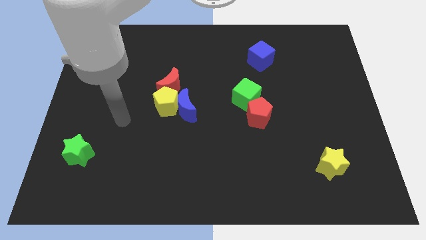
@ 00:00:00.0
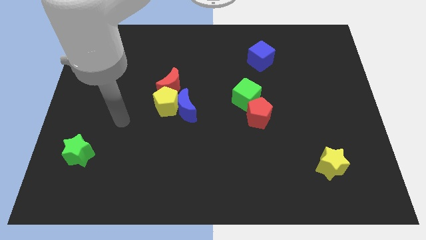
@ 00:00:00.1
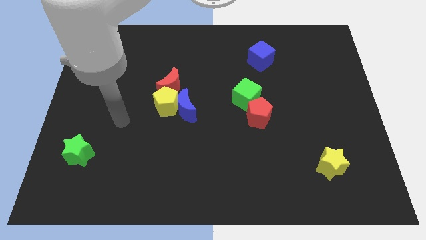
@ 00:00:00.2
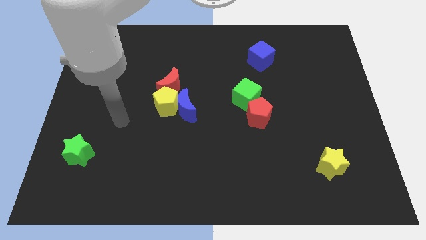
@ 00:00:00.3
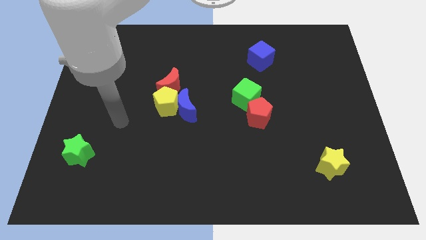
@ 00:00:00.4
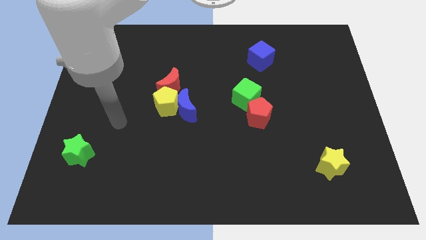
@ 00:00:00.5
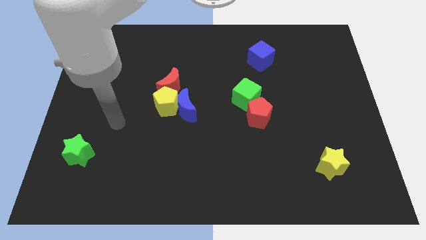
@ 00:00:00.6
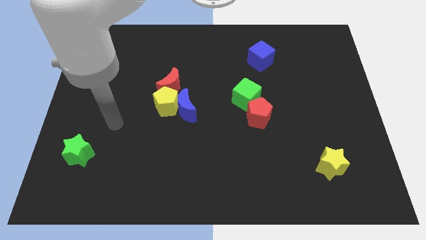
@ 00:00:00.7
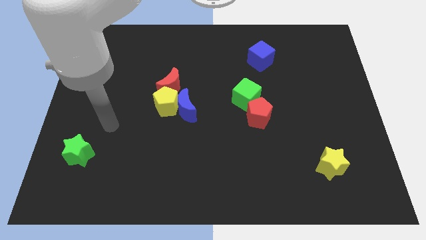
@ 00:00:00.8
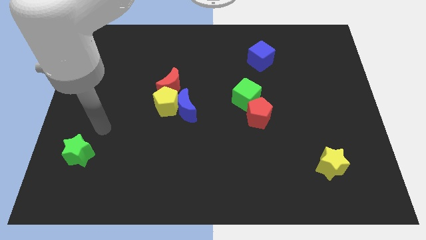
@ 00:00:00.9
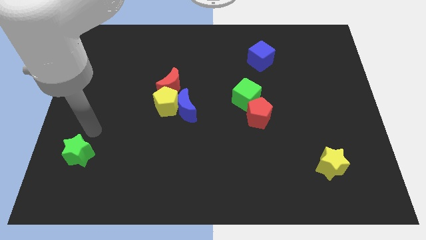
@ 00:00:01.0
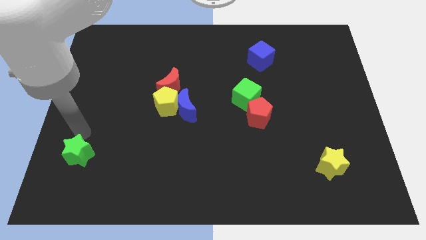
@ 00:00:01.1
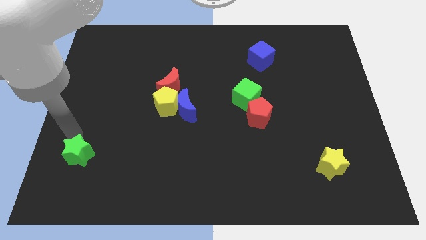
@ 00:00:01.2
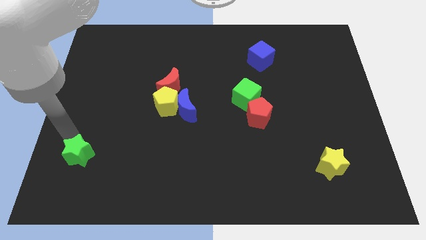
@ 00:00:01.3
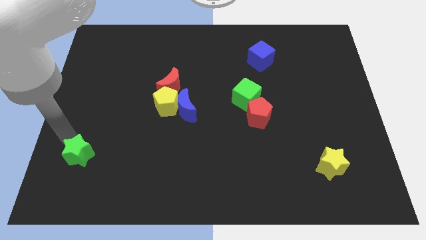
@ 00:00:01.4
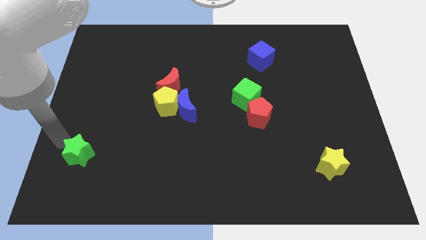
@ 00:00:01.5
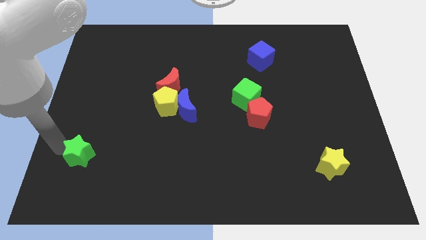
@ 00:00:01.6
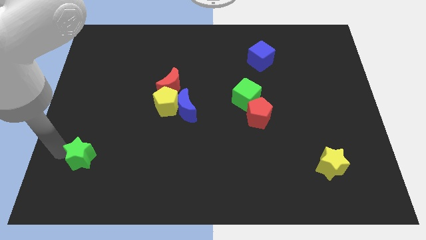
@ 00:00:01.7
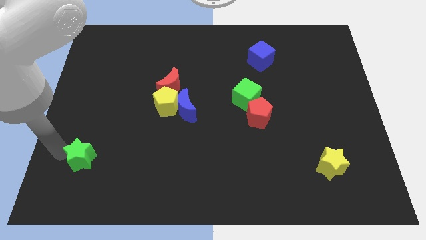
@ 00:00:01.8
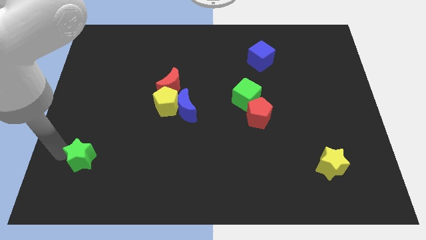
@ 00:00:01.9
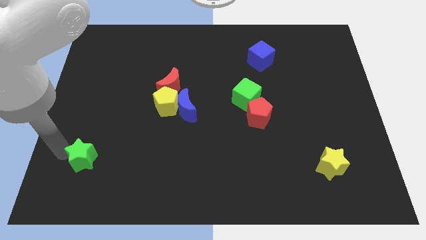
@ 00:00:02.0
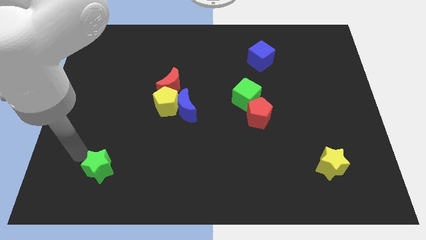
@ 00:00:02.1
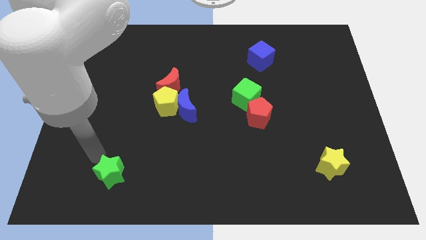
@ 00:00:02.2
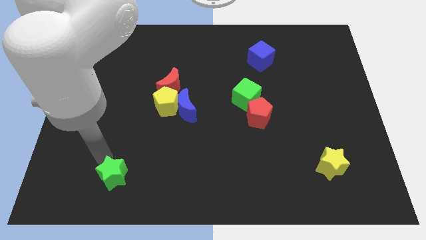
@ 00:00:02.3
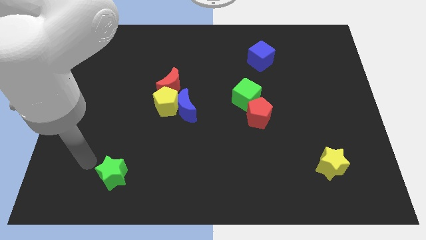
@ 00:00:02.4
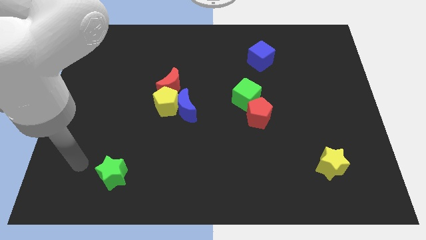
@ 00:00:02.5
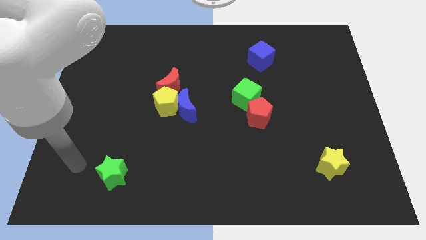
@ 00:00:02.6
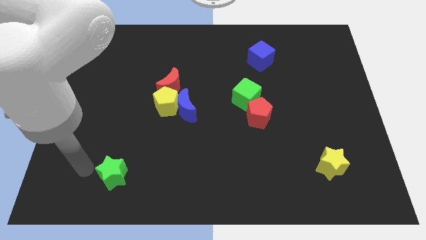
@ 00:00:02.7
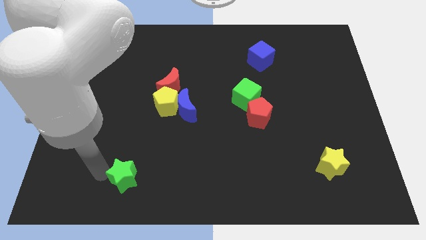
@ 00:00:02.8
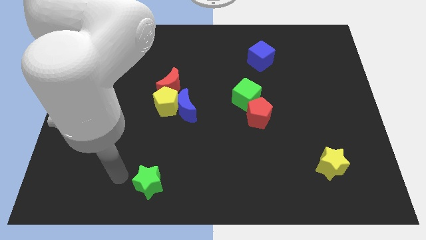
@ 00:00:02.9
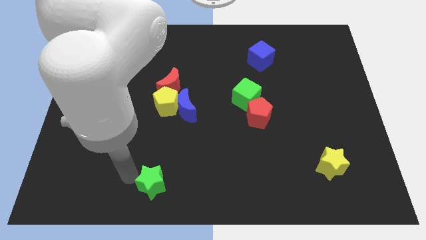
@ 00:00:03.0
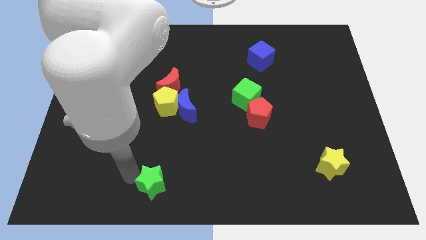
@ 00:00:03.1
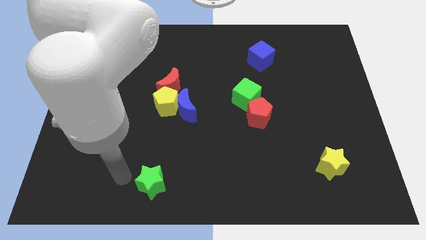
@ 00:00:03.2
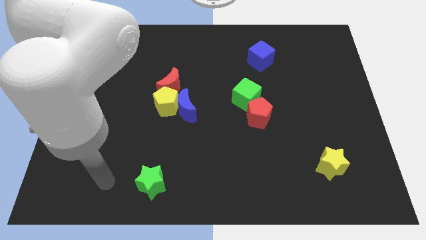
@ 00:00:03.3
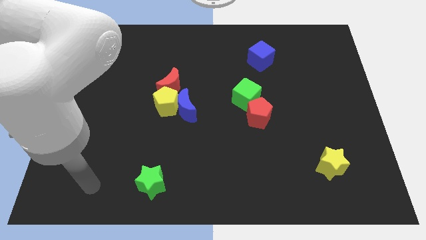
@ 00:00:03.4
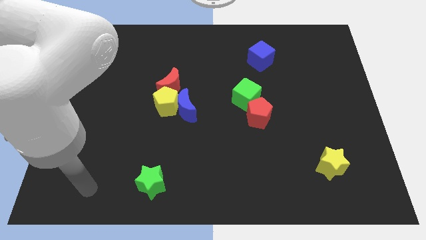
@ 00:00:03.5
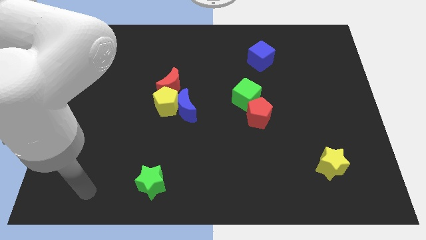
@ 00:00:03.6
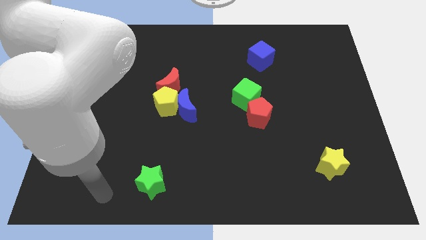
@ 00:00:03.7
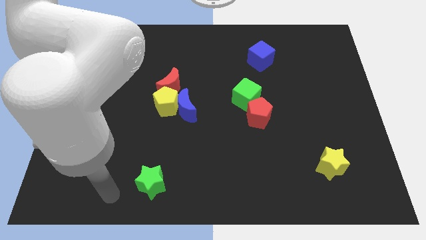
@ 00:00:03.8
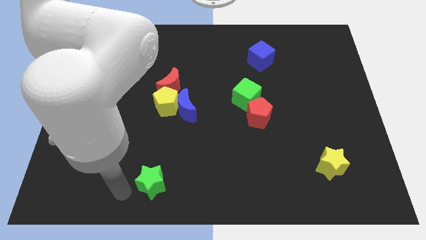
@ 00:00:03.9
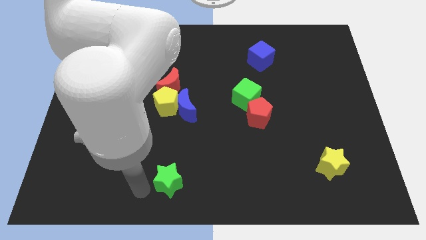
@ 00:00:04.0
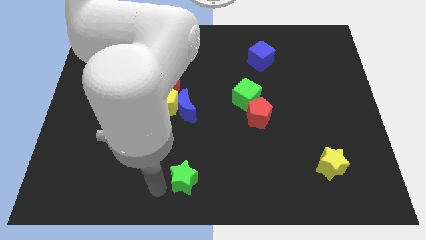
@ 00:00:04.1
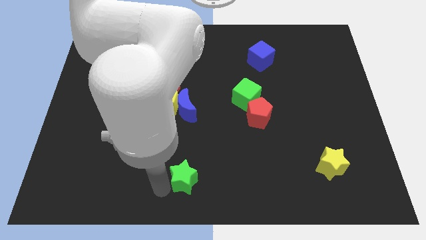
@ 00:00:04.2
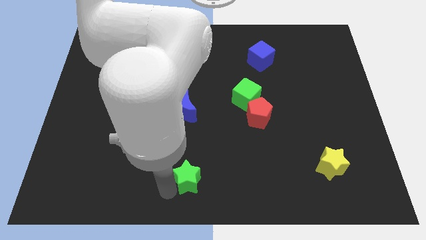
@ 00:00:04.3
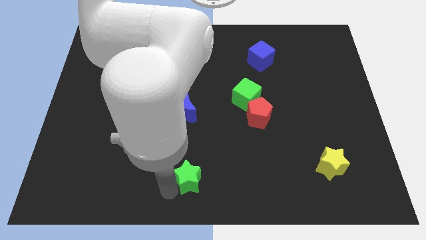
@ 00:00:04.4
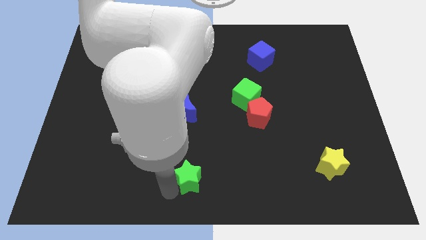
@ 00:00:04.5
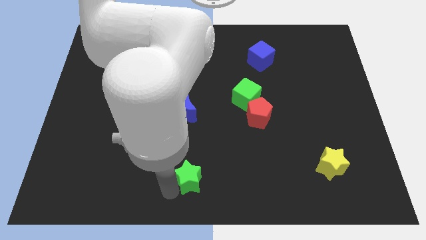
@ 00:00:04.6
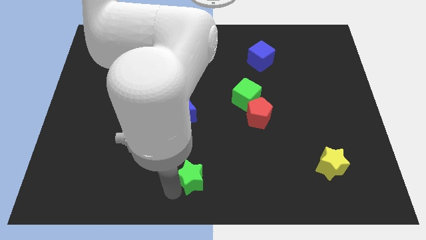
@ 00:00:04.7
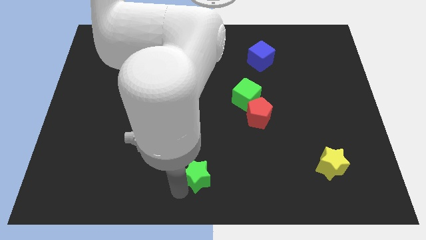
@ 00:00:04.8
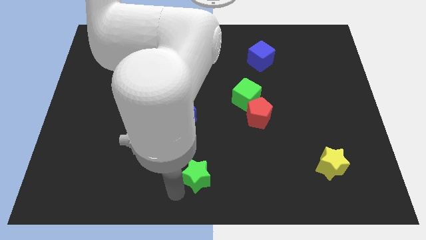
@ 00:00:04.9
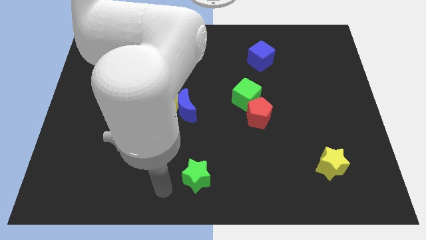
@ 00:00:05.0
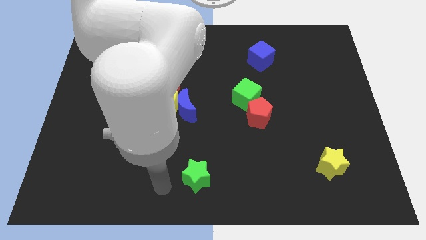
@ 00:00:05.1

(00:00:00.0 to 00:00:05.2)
move the green star to the bottom center of the board

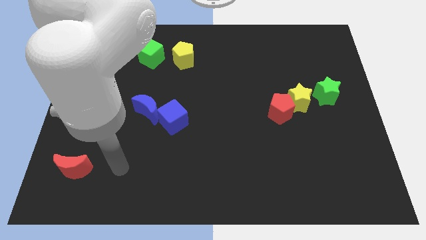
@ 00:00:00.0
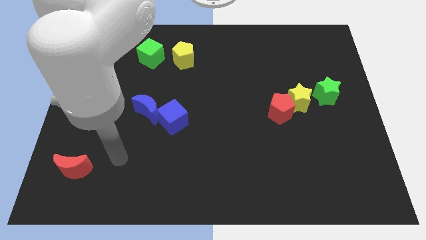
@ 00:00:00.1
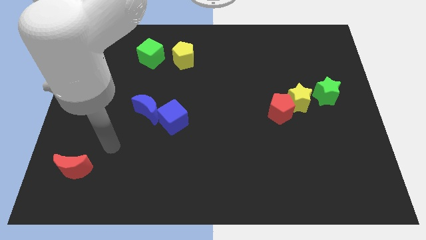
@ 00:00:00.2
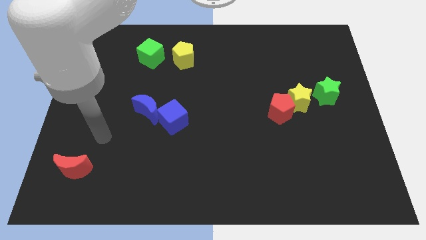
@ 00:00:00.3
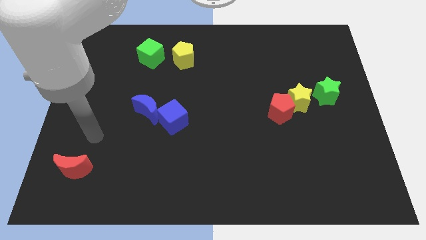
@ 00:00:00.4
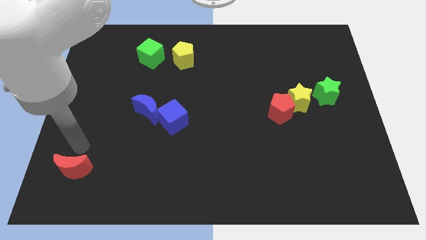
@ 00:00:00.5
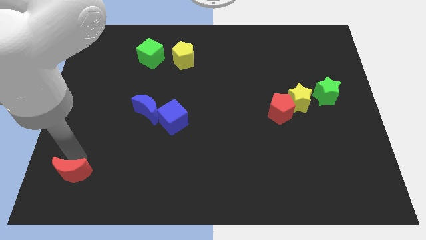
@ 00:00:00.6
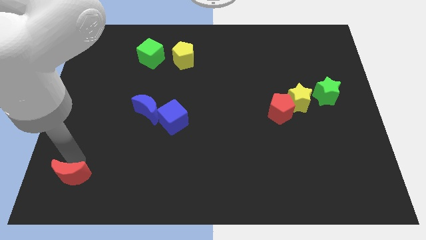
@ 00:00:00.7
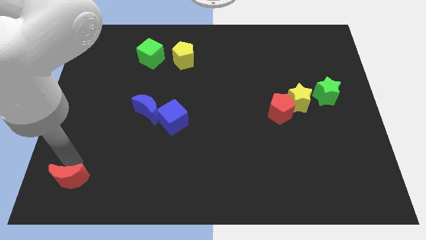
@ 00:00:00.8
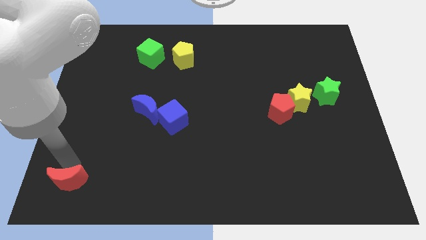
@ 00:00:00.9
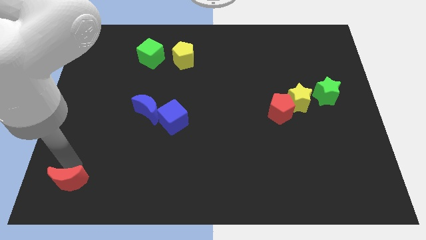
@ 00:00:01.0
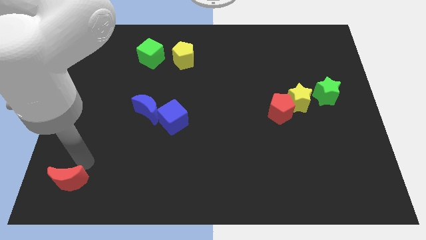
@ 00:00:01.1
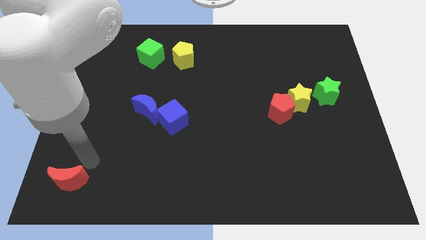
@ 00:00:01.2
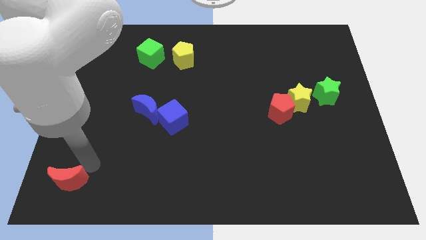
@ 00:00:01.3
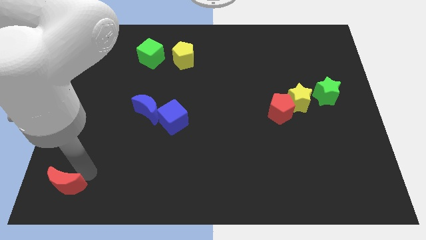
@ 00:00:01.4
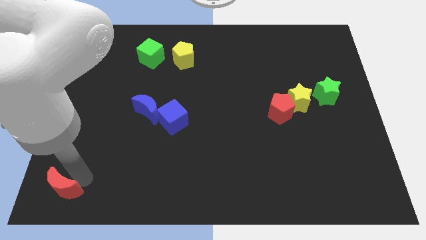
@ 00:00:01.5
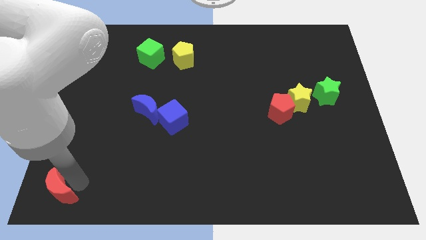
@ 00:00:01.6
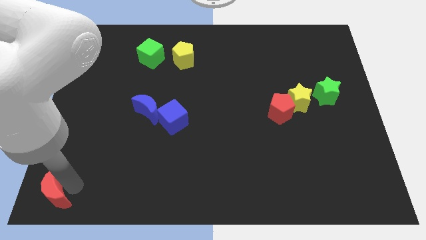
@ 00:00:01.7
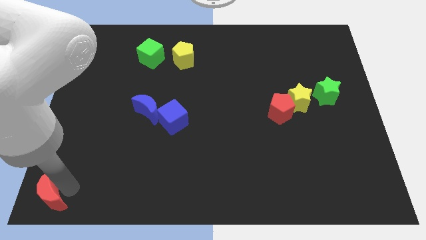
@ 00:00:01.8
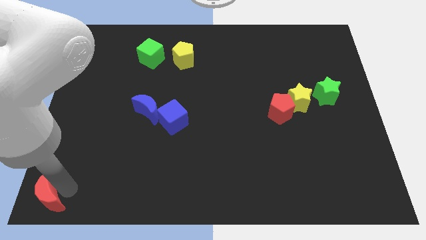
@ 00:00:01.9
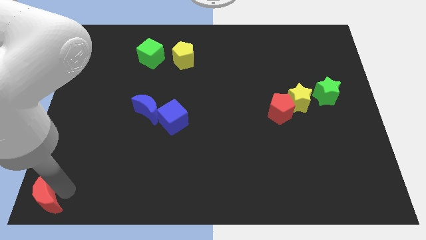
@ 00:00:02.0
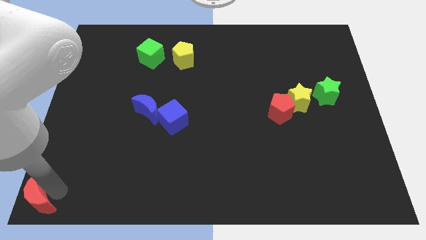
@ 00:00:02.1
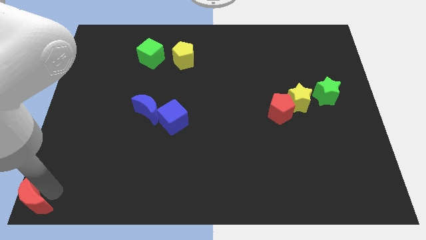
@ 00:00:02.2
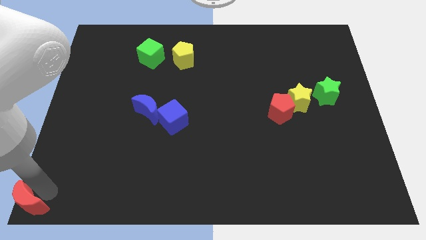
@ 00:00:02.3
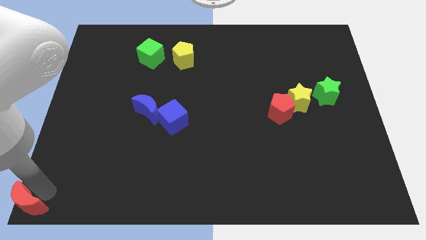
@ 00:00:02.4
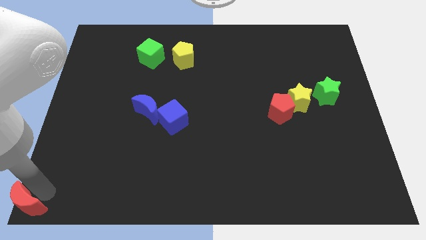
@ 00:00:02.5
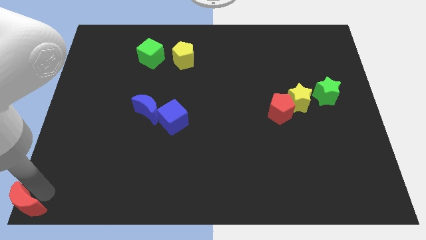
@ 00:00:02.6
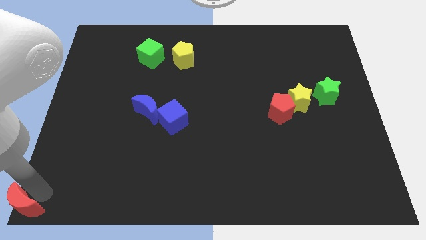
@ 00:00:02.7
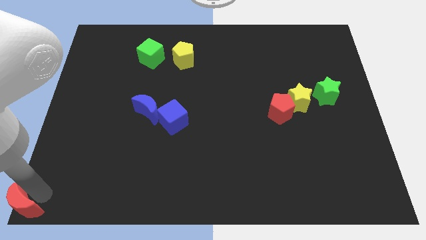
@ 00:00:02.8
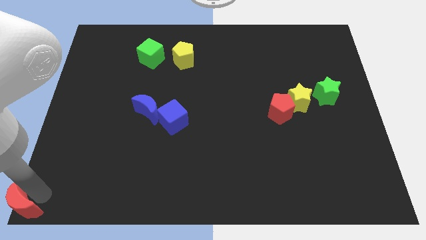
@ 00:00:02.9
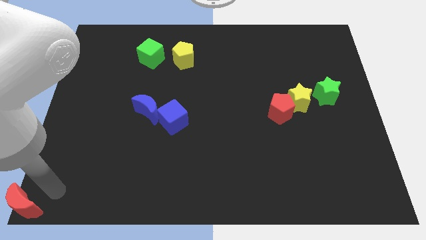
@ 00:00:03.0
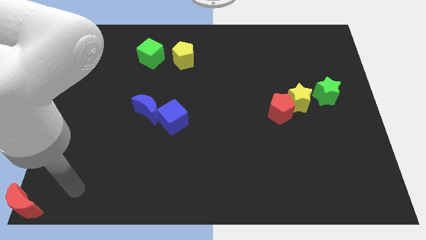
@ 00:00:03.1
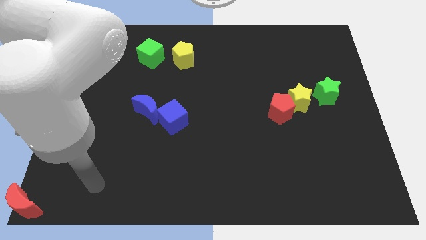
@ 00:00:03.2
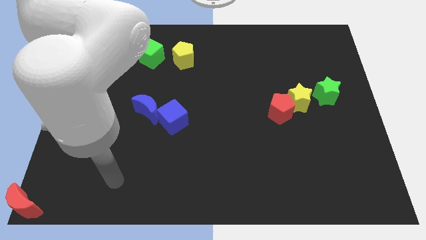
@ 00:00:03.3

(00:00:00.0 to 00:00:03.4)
move the red crescent to the bottom left corner of the board

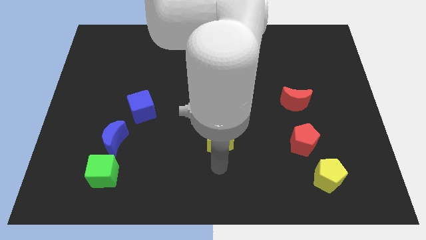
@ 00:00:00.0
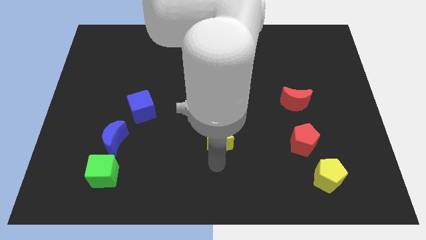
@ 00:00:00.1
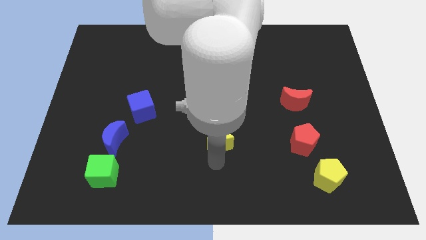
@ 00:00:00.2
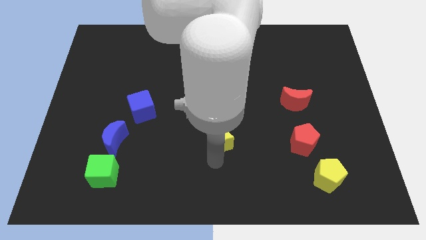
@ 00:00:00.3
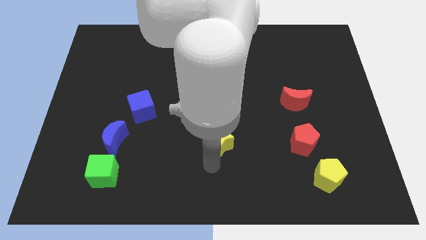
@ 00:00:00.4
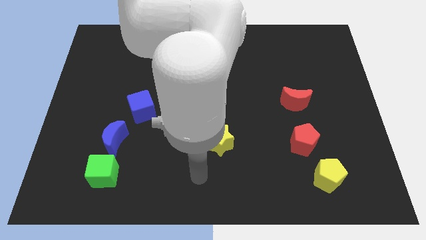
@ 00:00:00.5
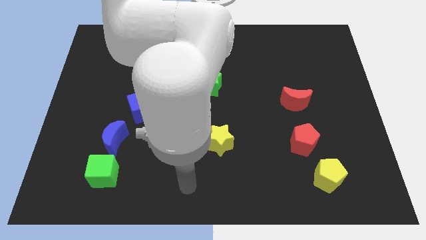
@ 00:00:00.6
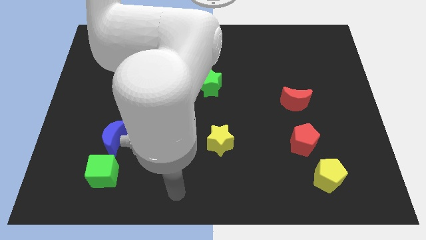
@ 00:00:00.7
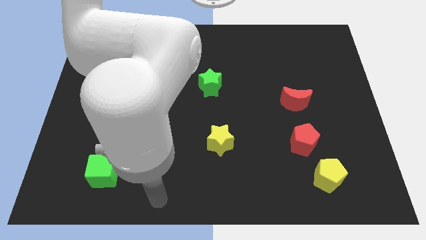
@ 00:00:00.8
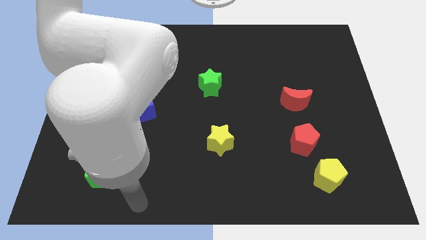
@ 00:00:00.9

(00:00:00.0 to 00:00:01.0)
move your arm away from yellow star
